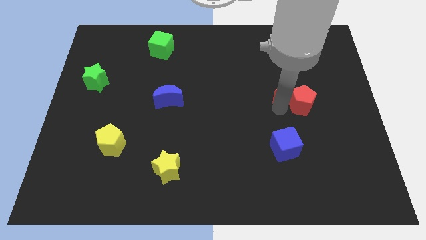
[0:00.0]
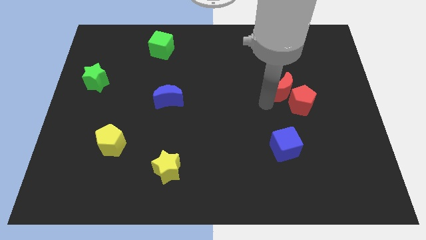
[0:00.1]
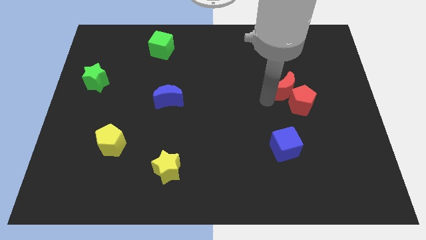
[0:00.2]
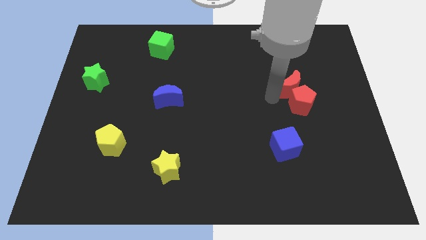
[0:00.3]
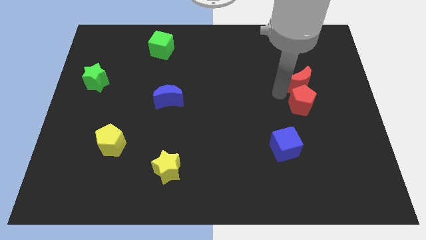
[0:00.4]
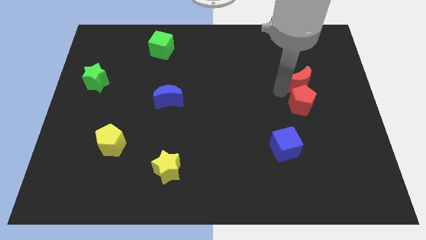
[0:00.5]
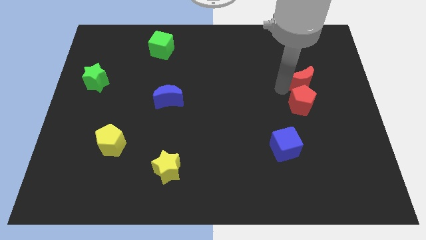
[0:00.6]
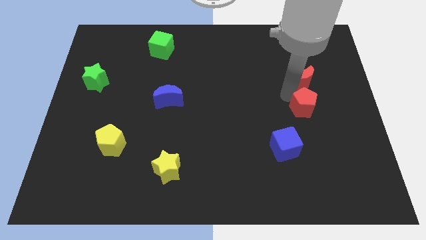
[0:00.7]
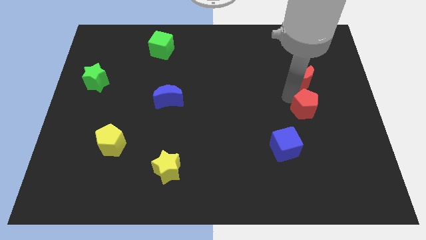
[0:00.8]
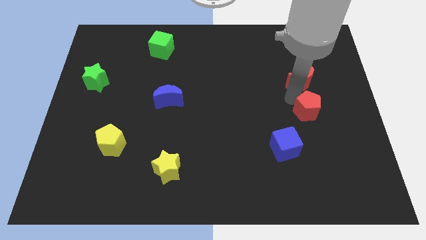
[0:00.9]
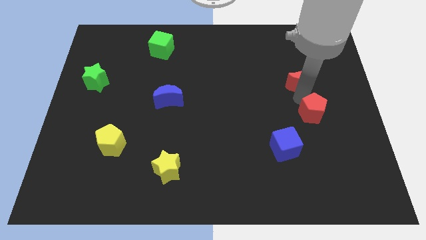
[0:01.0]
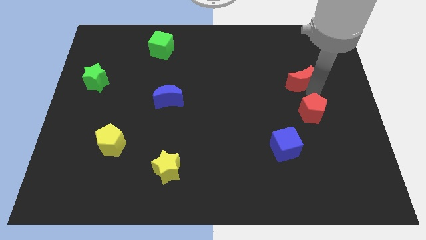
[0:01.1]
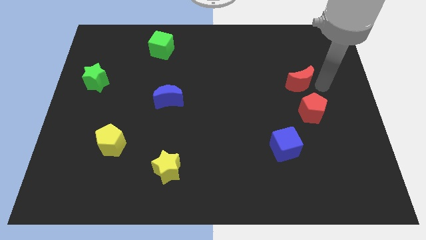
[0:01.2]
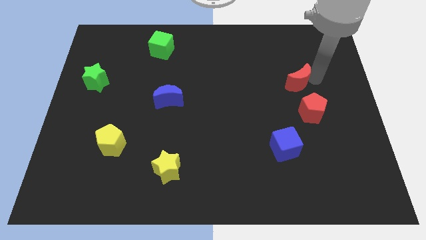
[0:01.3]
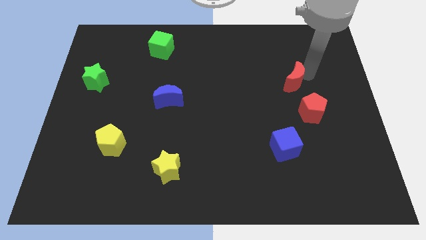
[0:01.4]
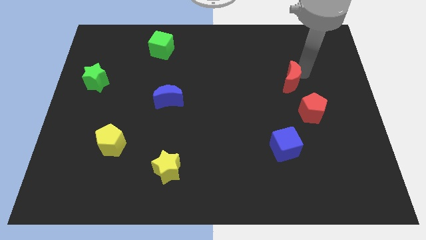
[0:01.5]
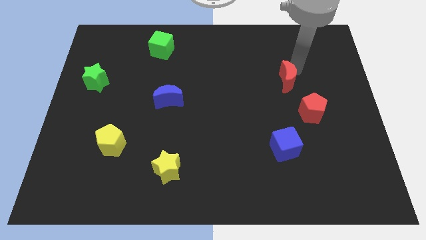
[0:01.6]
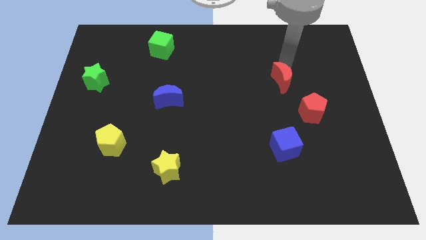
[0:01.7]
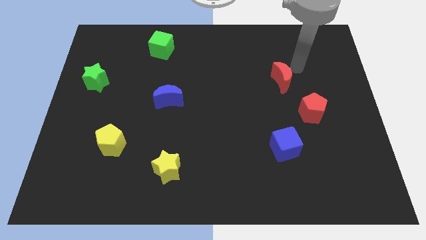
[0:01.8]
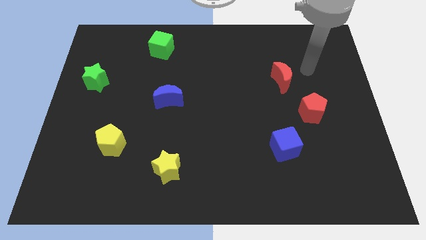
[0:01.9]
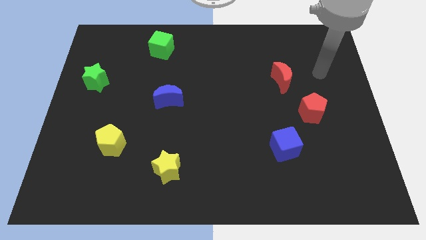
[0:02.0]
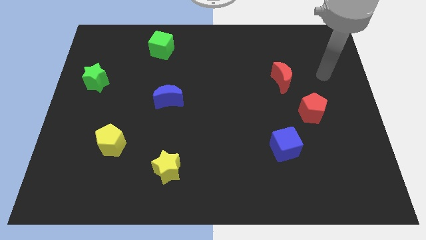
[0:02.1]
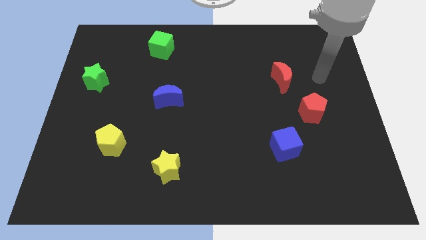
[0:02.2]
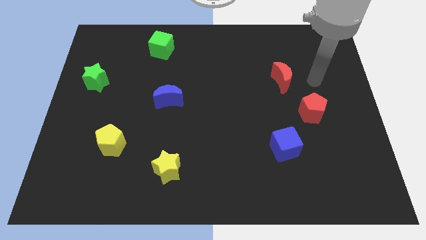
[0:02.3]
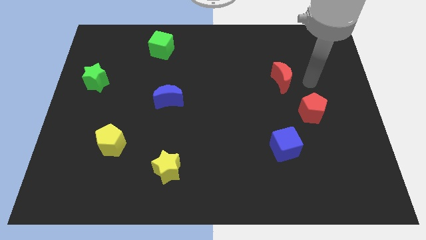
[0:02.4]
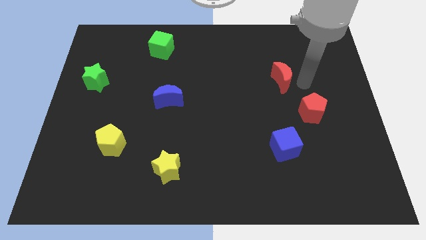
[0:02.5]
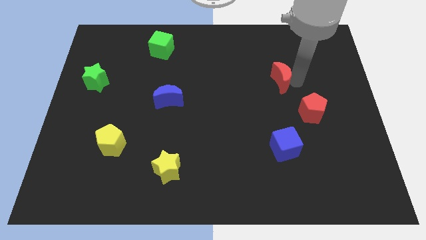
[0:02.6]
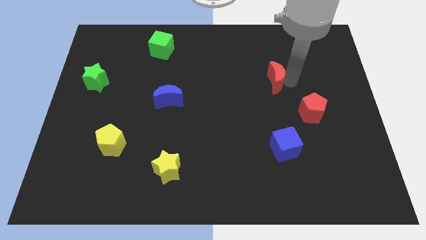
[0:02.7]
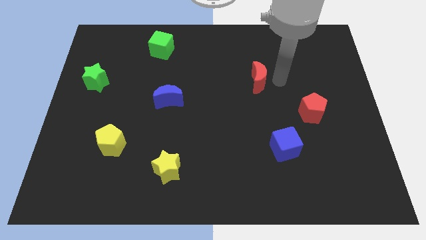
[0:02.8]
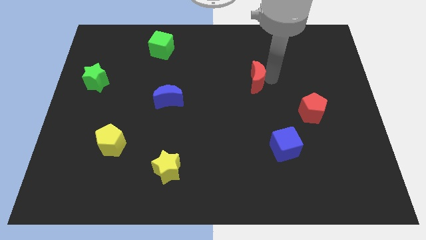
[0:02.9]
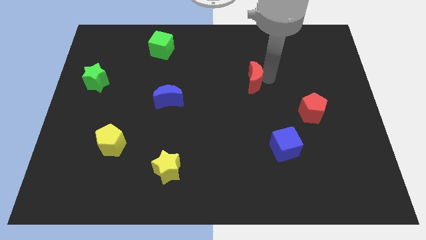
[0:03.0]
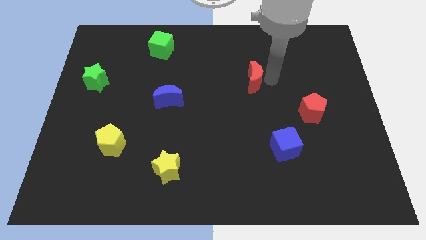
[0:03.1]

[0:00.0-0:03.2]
separate the red crescent from red pentagon

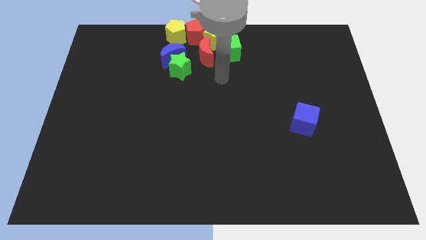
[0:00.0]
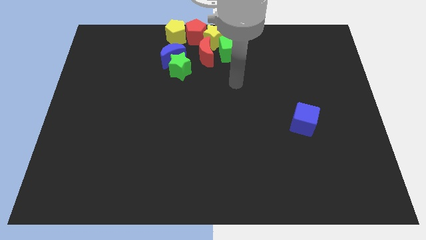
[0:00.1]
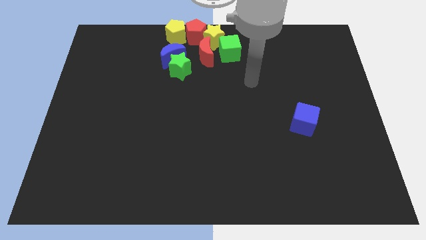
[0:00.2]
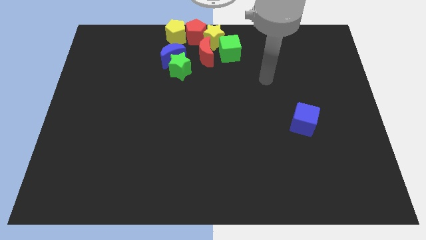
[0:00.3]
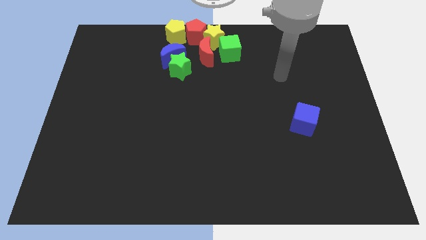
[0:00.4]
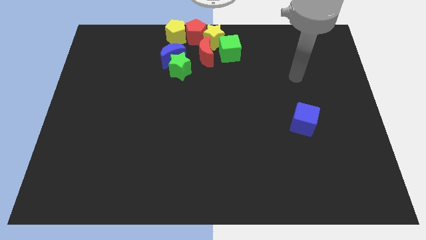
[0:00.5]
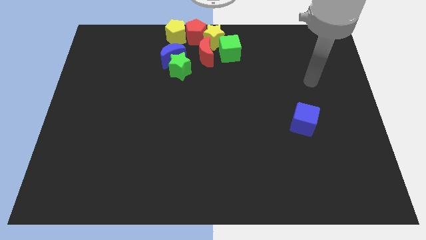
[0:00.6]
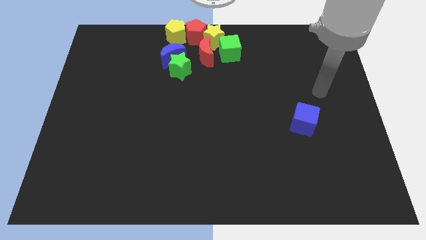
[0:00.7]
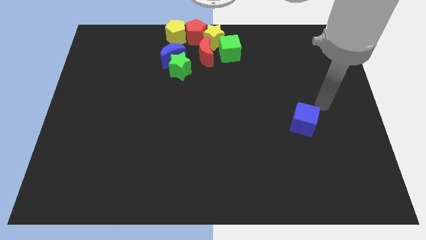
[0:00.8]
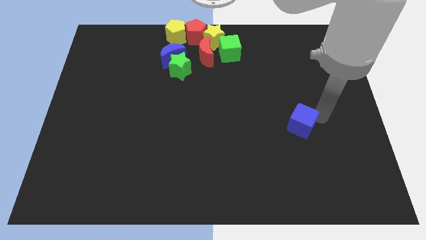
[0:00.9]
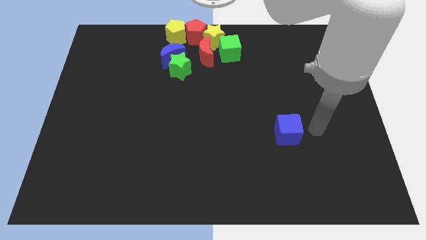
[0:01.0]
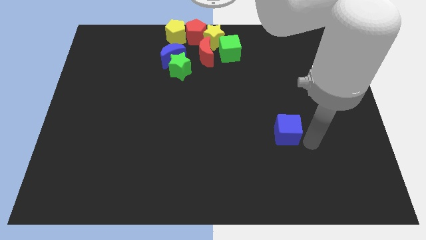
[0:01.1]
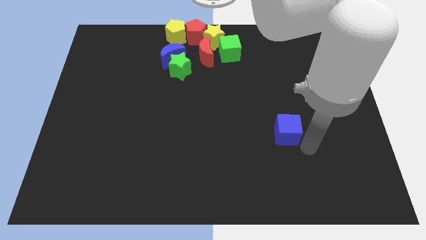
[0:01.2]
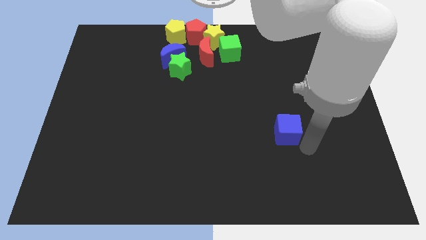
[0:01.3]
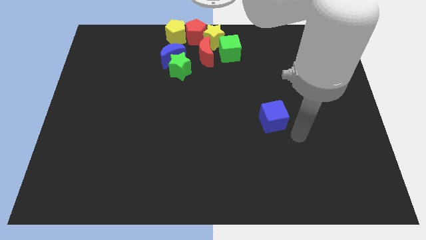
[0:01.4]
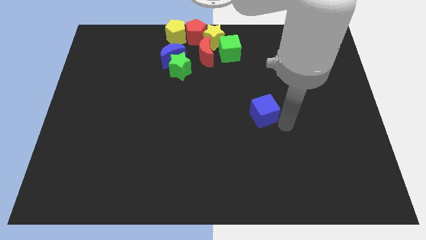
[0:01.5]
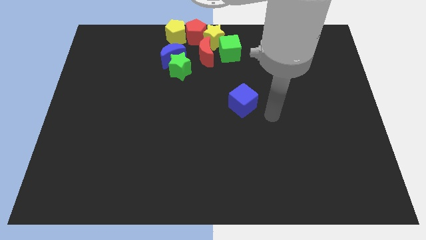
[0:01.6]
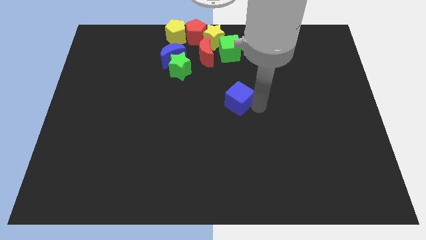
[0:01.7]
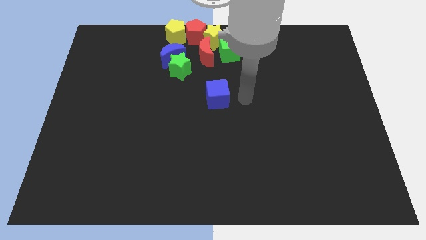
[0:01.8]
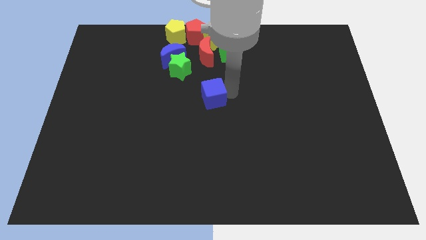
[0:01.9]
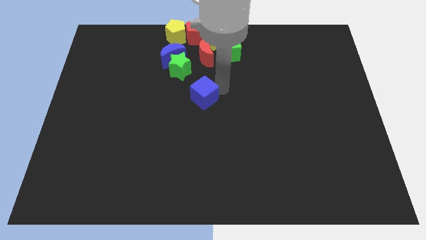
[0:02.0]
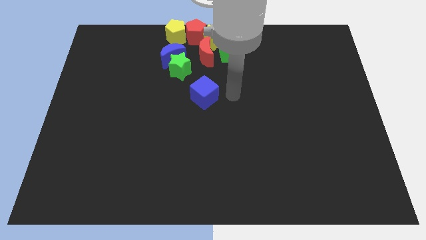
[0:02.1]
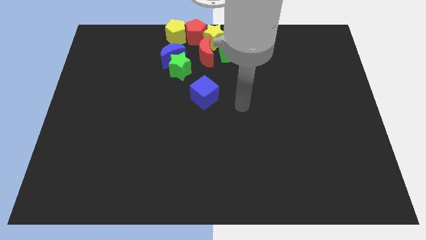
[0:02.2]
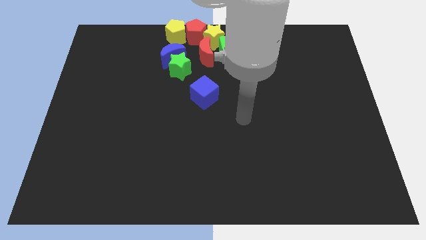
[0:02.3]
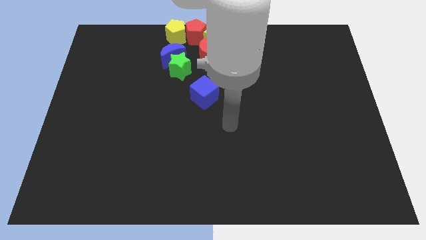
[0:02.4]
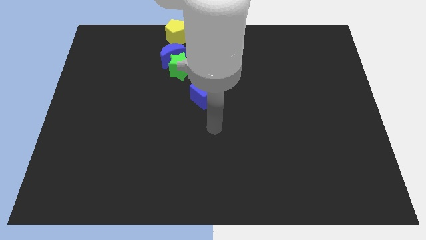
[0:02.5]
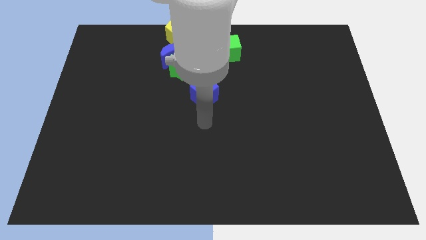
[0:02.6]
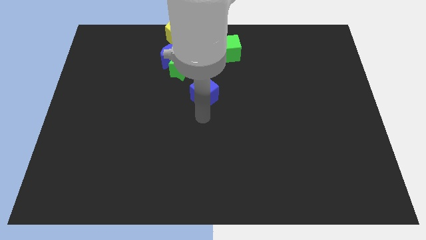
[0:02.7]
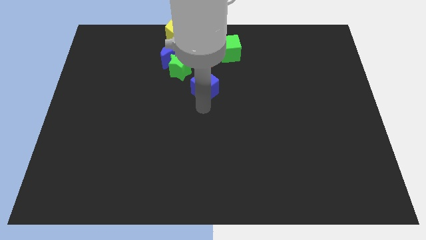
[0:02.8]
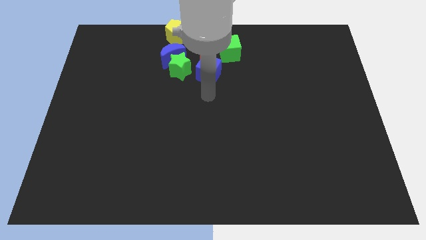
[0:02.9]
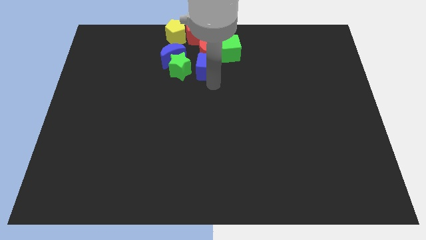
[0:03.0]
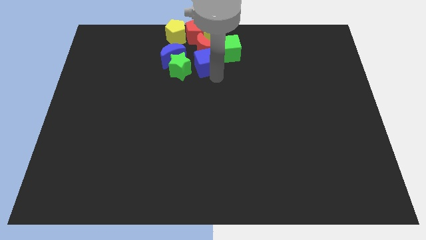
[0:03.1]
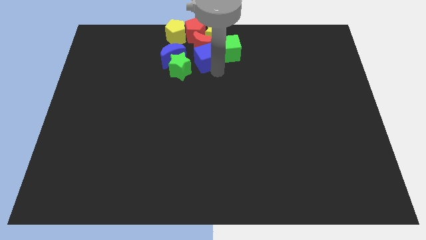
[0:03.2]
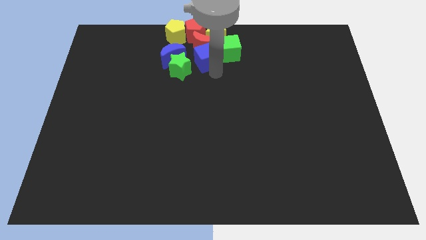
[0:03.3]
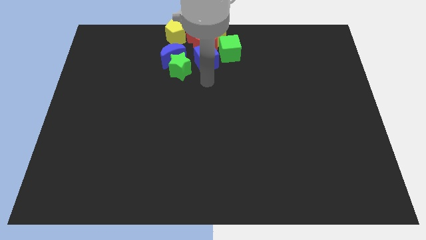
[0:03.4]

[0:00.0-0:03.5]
push the blue cube into the red crescent

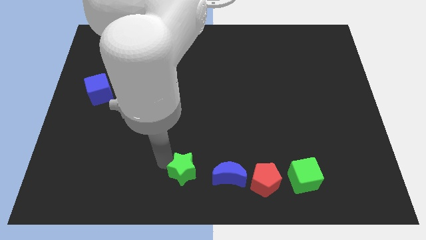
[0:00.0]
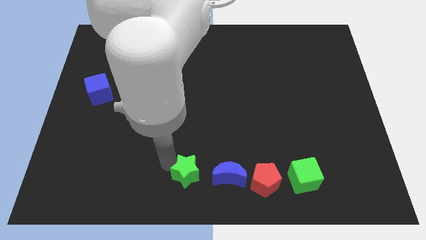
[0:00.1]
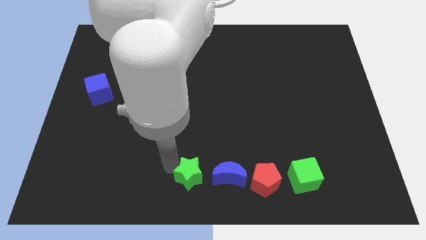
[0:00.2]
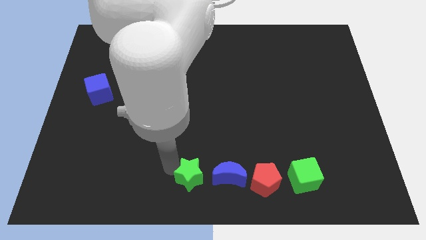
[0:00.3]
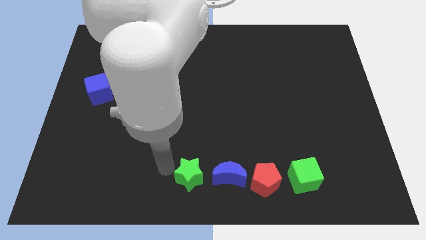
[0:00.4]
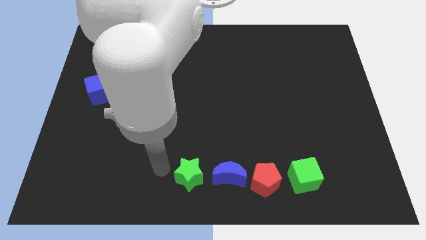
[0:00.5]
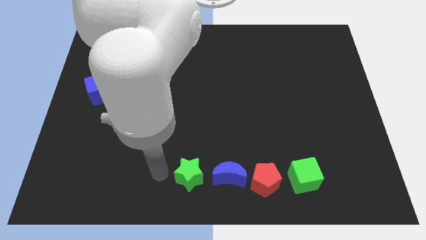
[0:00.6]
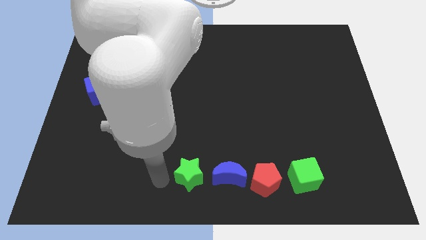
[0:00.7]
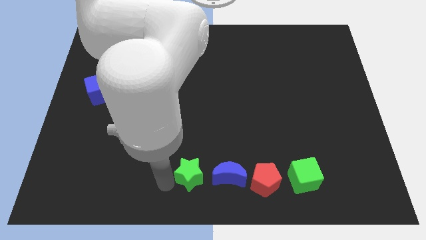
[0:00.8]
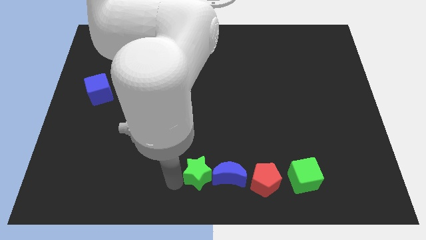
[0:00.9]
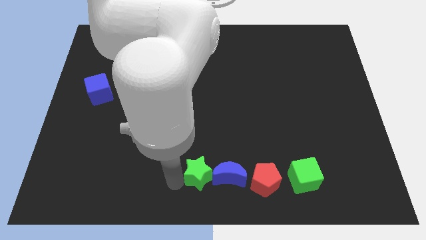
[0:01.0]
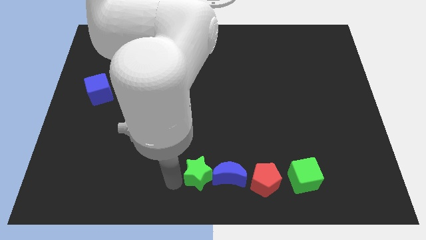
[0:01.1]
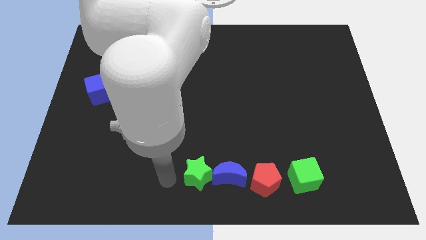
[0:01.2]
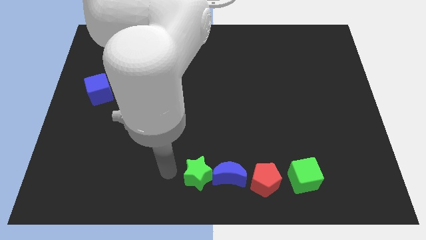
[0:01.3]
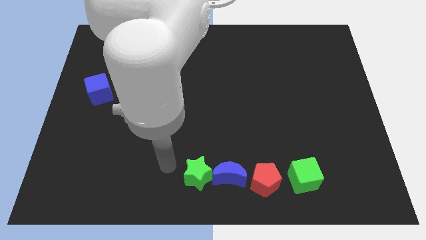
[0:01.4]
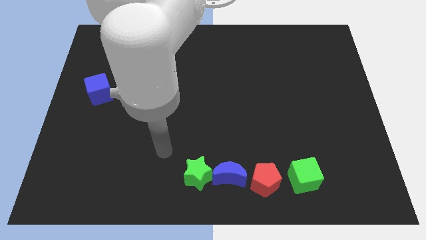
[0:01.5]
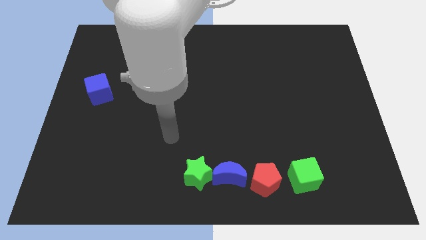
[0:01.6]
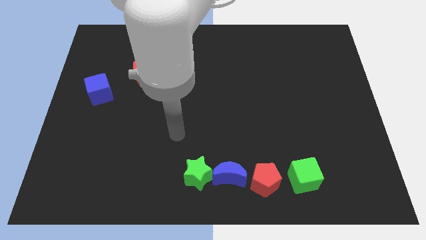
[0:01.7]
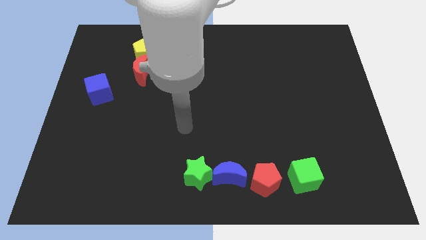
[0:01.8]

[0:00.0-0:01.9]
move the green star into the blue moon

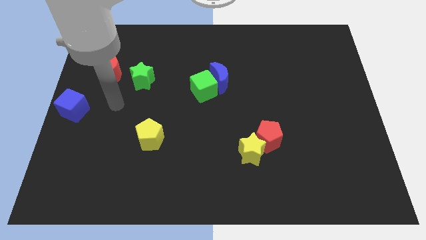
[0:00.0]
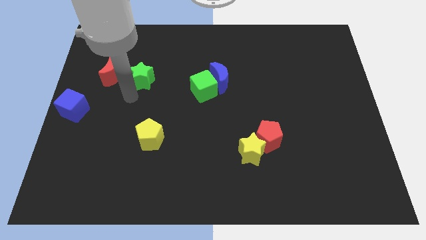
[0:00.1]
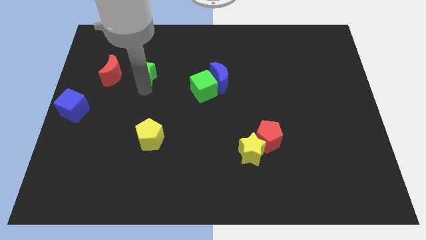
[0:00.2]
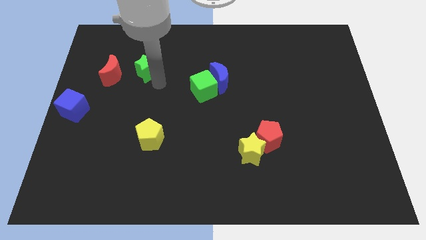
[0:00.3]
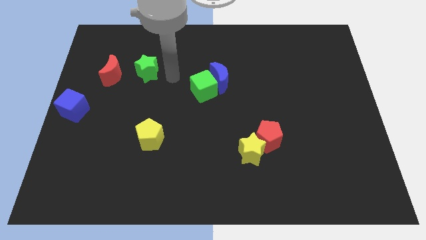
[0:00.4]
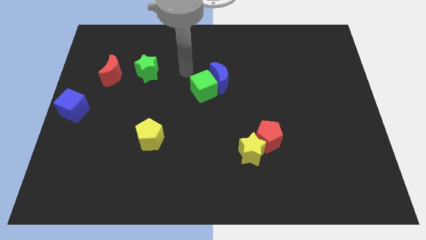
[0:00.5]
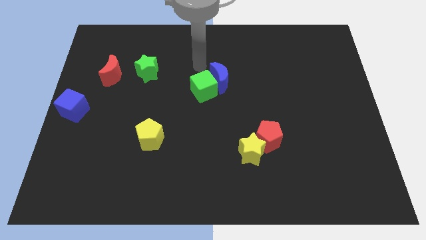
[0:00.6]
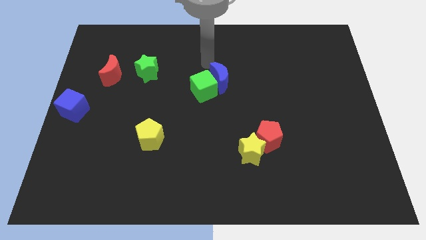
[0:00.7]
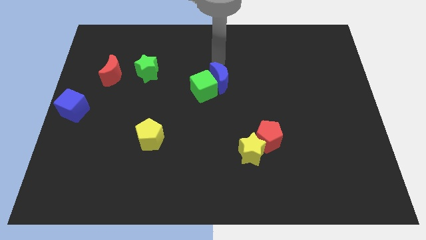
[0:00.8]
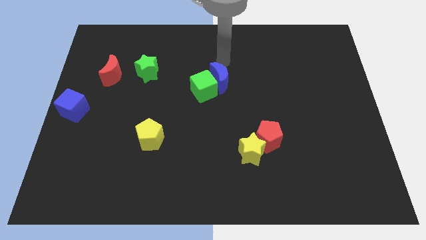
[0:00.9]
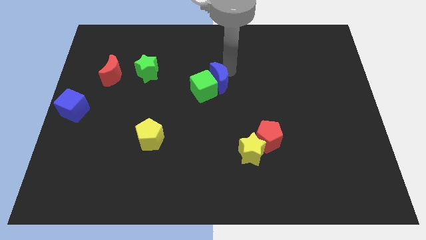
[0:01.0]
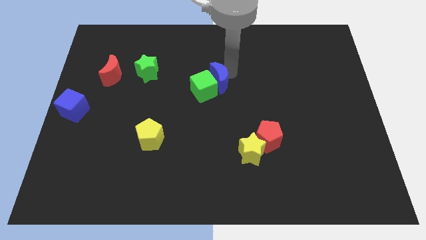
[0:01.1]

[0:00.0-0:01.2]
move arm near blue moon
